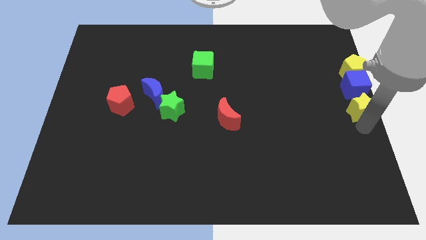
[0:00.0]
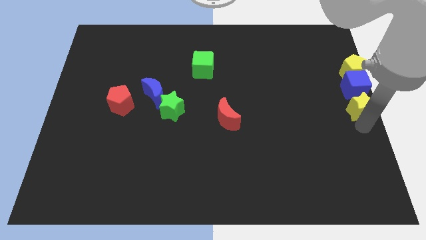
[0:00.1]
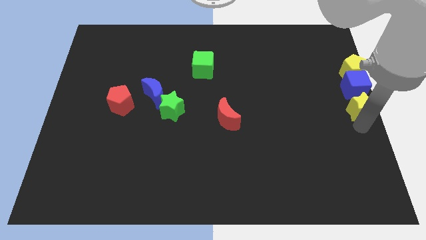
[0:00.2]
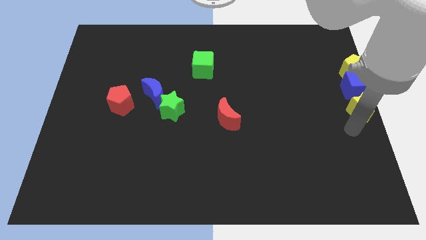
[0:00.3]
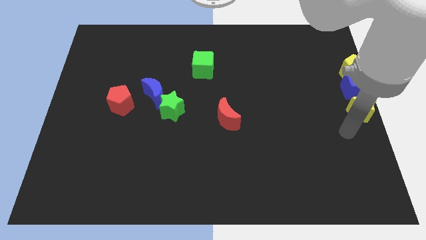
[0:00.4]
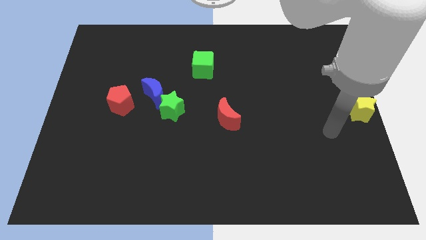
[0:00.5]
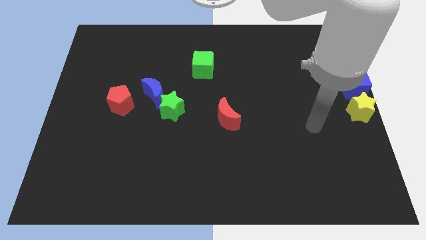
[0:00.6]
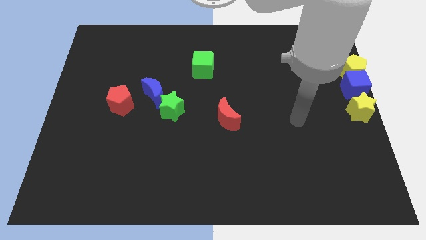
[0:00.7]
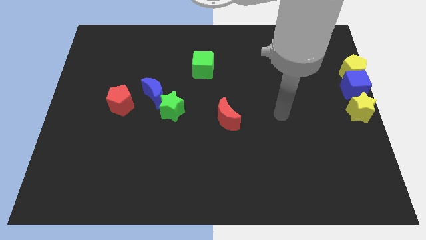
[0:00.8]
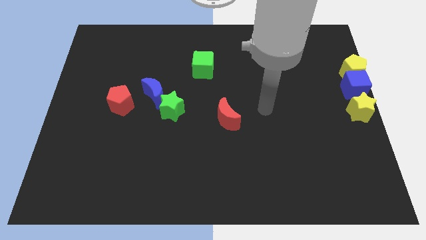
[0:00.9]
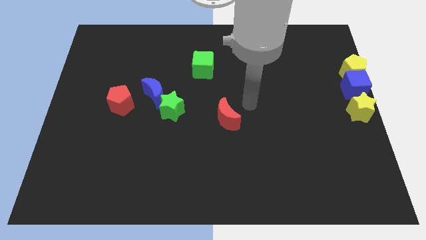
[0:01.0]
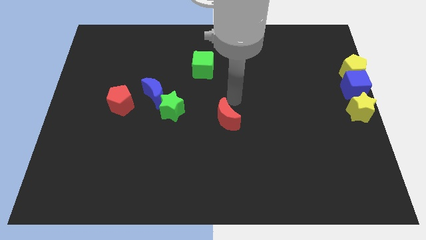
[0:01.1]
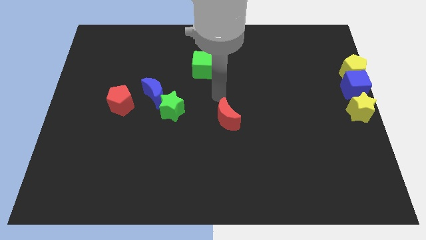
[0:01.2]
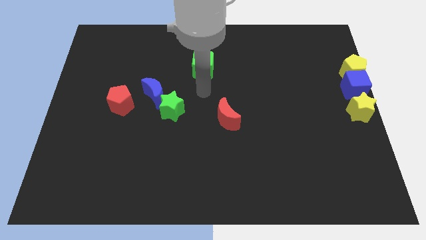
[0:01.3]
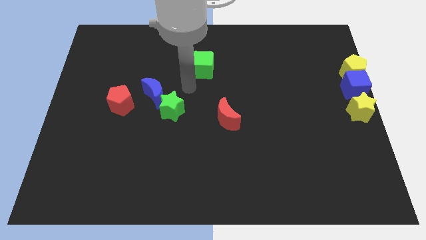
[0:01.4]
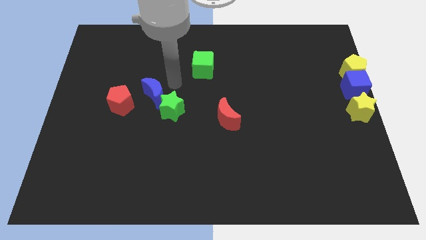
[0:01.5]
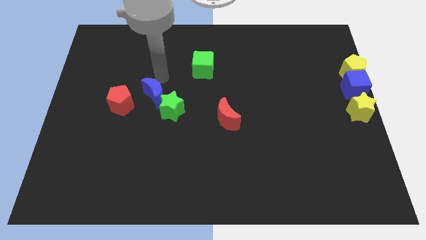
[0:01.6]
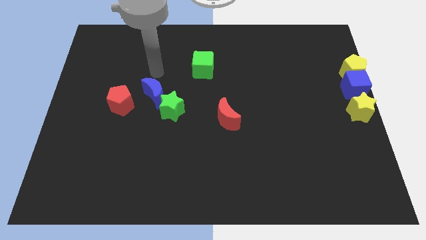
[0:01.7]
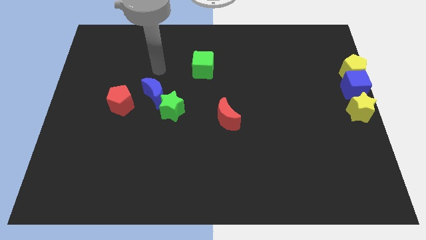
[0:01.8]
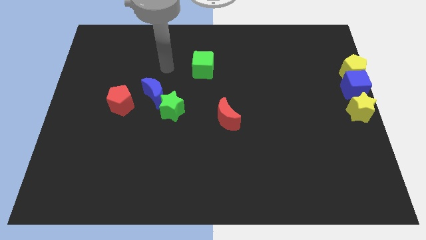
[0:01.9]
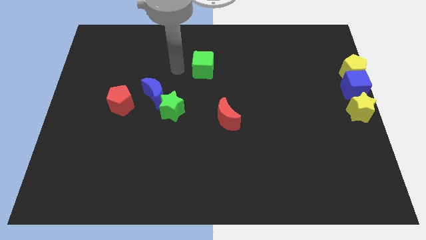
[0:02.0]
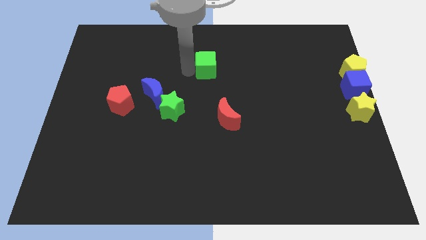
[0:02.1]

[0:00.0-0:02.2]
move your arm towards the green cube

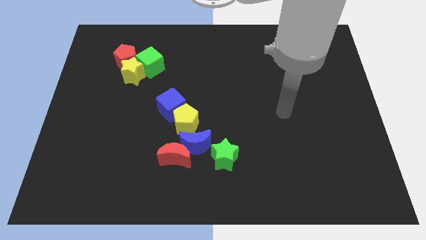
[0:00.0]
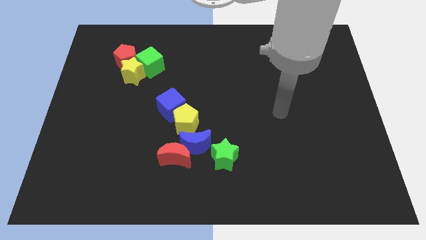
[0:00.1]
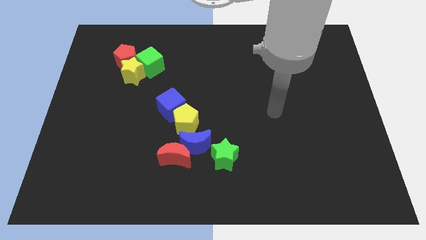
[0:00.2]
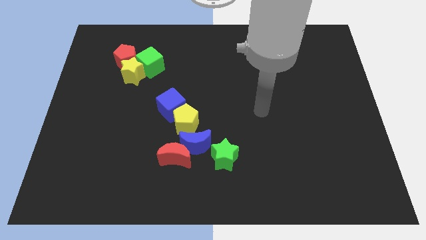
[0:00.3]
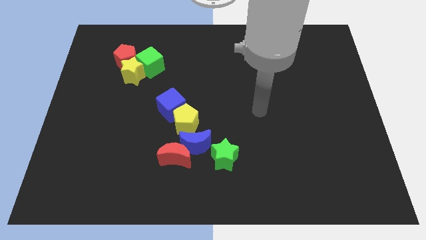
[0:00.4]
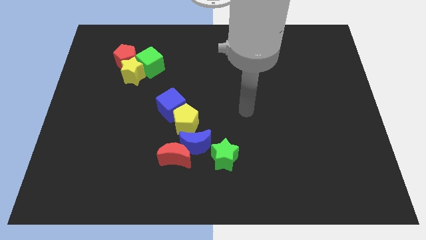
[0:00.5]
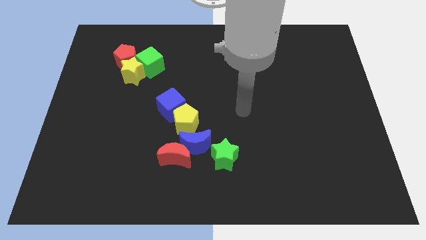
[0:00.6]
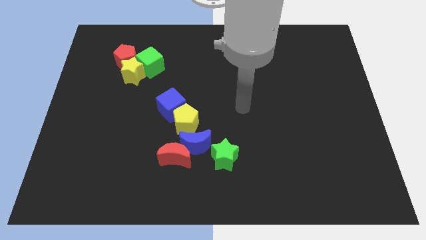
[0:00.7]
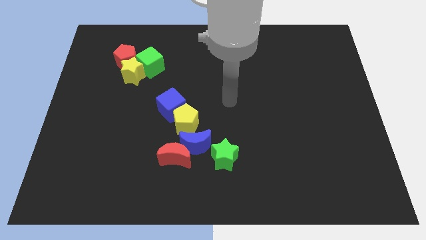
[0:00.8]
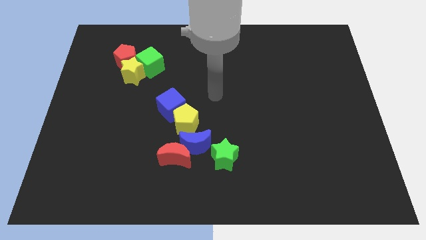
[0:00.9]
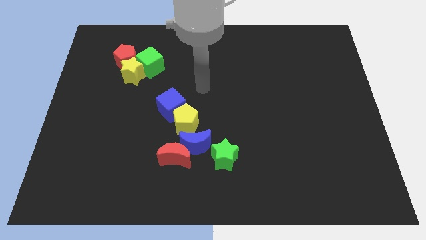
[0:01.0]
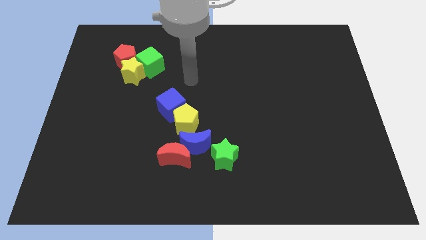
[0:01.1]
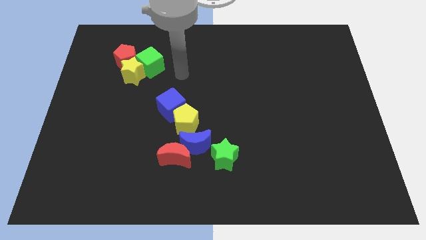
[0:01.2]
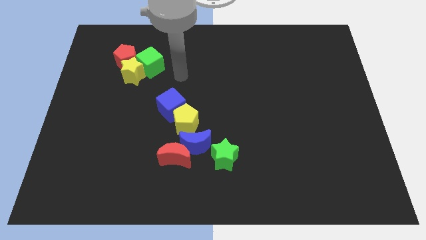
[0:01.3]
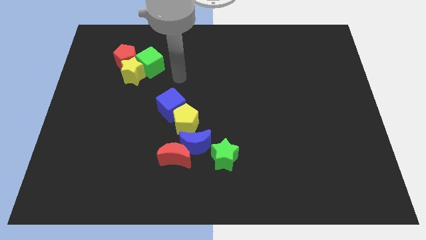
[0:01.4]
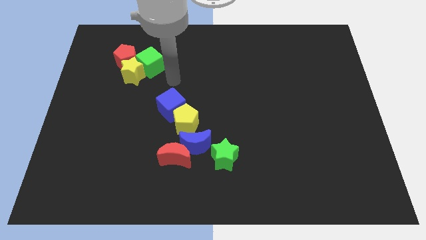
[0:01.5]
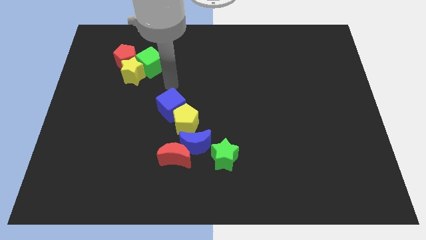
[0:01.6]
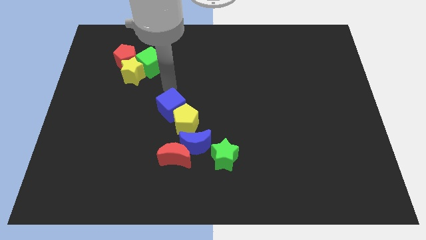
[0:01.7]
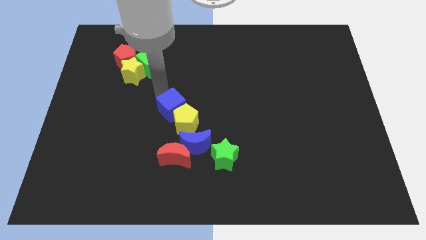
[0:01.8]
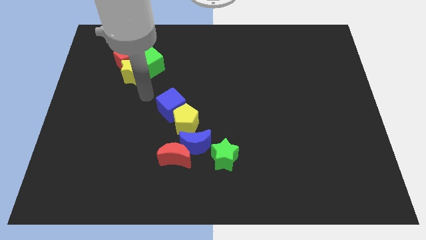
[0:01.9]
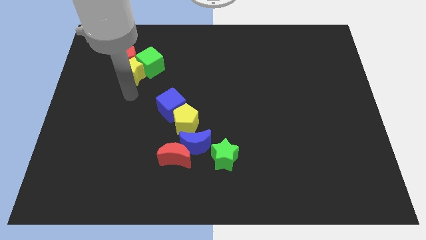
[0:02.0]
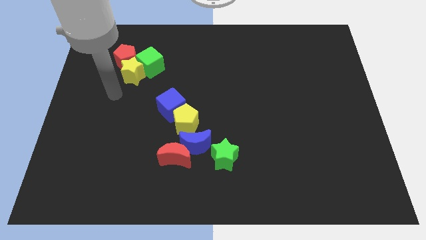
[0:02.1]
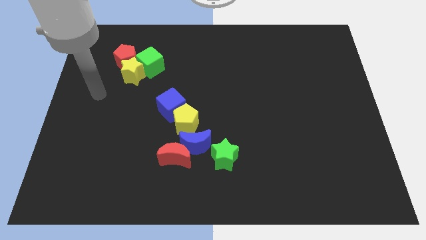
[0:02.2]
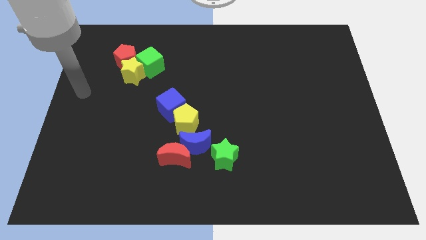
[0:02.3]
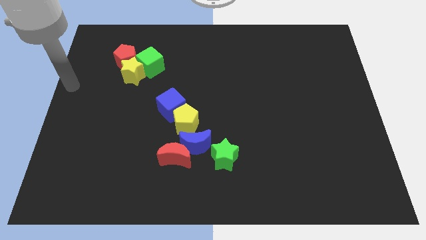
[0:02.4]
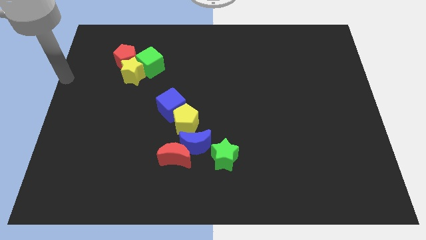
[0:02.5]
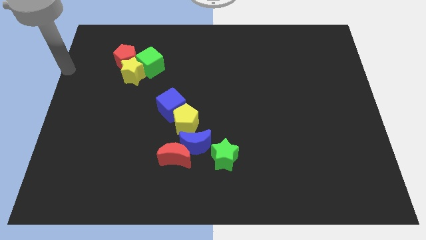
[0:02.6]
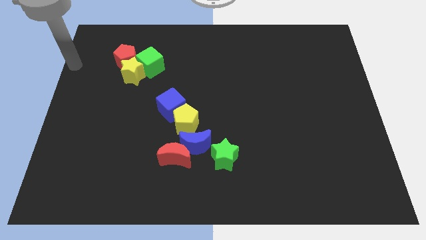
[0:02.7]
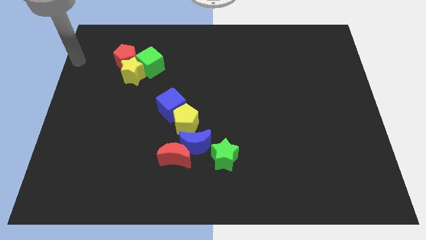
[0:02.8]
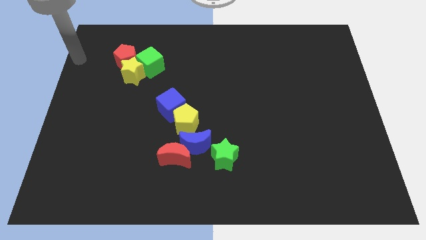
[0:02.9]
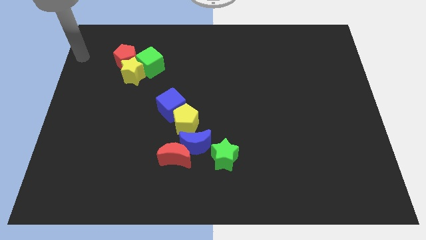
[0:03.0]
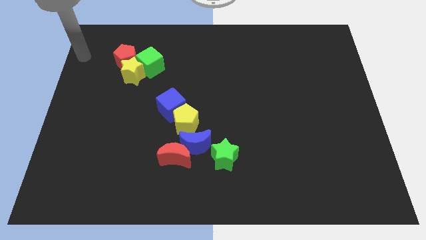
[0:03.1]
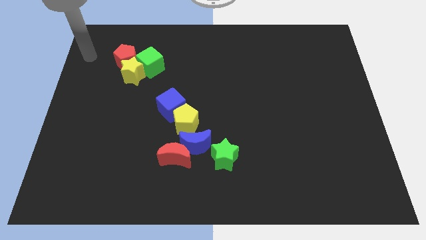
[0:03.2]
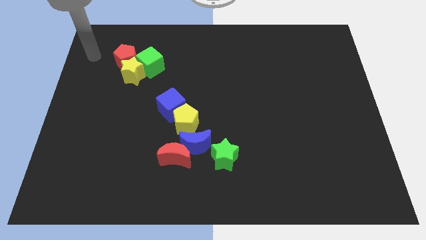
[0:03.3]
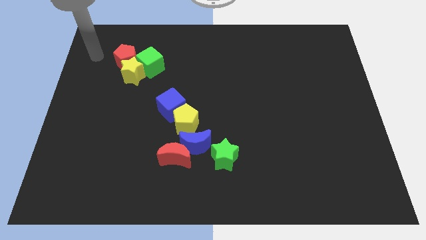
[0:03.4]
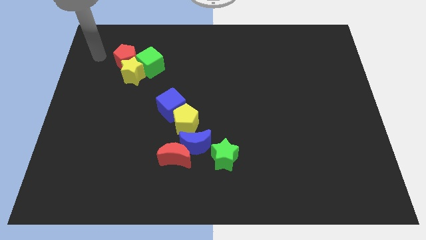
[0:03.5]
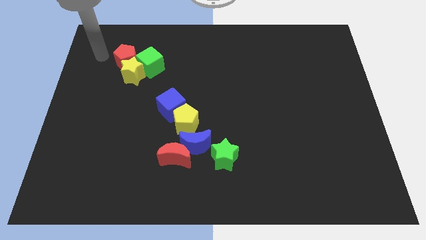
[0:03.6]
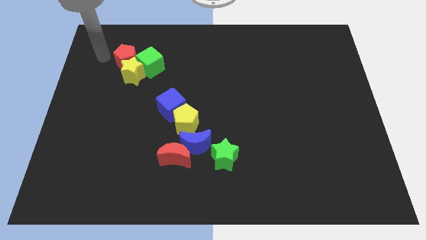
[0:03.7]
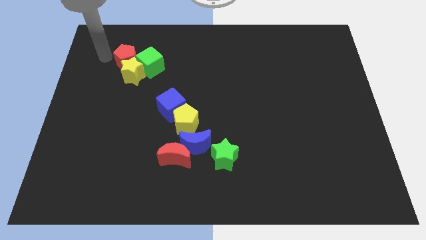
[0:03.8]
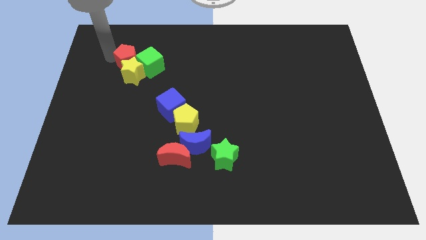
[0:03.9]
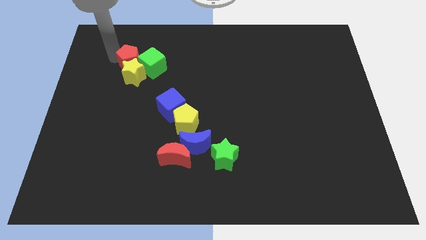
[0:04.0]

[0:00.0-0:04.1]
point your arm to left of red pentagon

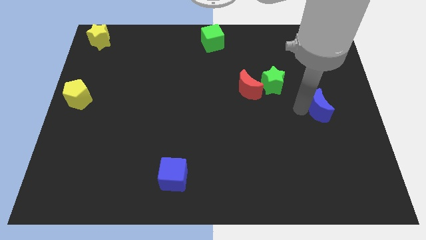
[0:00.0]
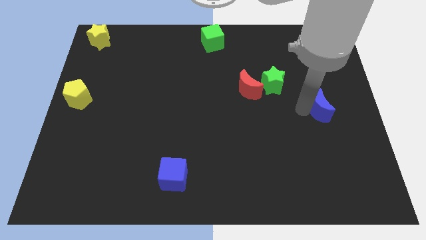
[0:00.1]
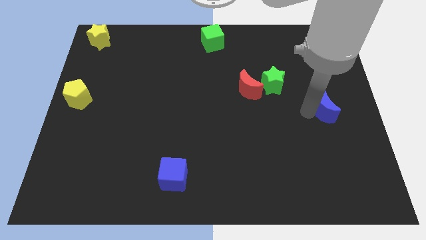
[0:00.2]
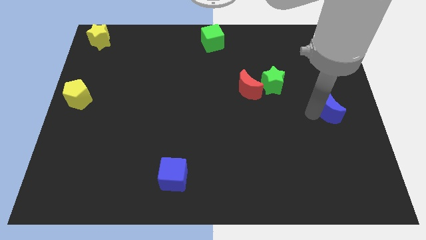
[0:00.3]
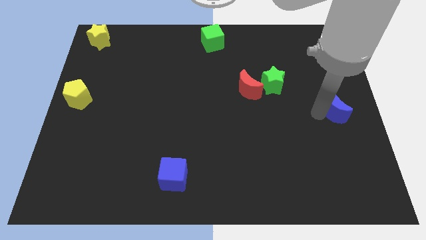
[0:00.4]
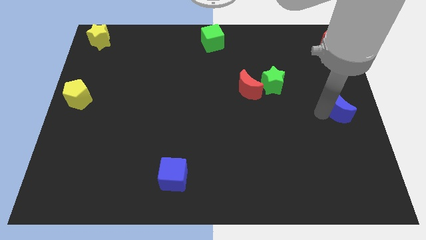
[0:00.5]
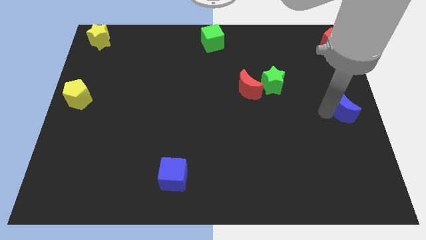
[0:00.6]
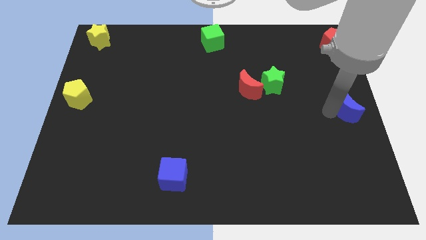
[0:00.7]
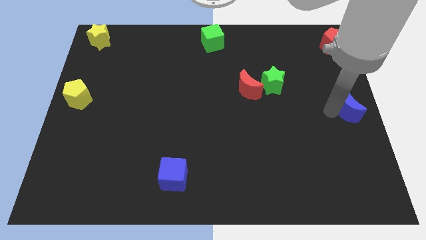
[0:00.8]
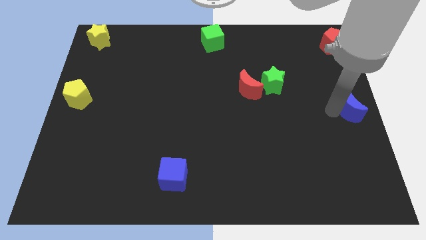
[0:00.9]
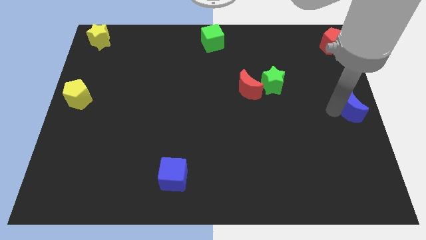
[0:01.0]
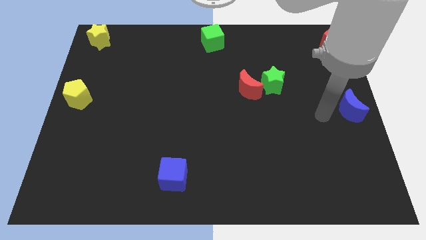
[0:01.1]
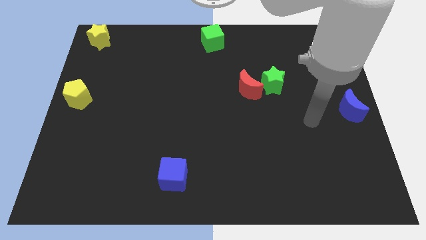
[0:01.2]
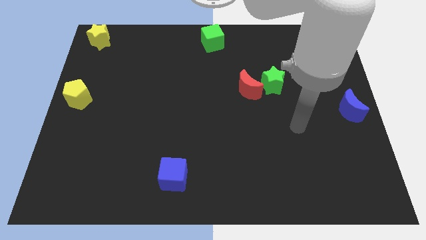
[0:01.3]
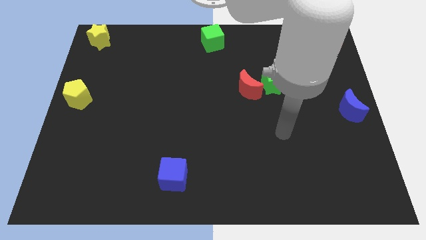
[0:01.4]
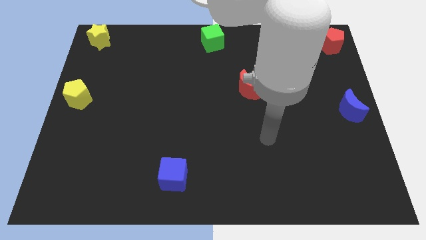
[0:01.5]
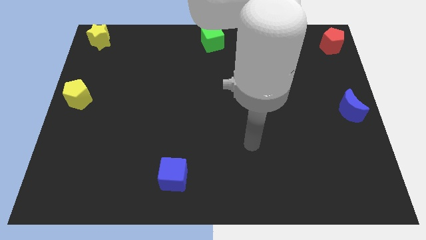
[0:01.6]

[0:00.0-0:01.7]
push the blue crescent to the right center of the board

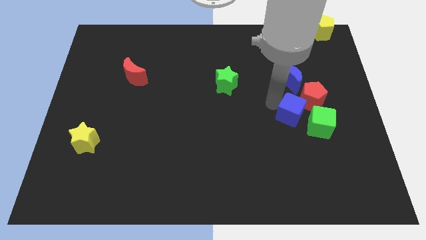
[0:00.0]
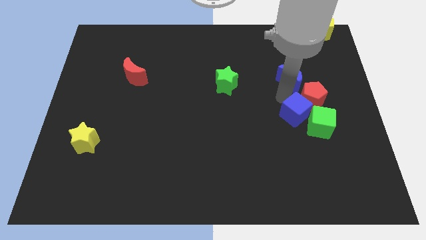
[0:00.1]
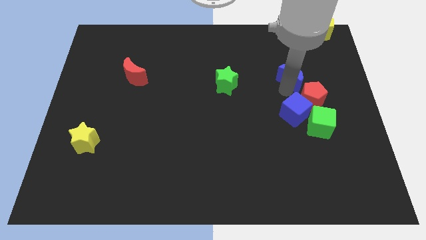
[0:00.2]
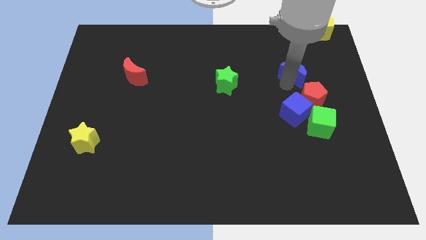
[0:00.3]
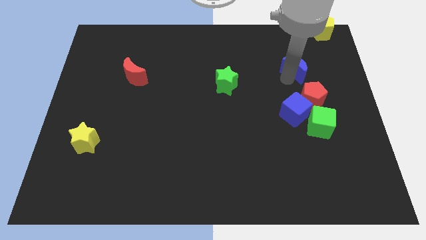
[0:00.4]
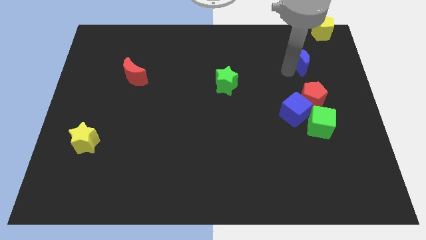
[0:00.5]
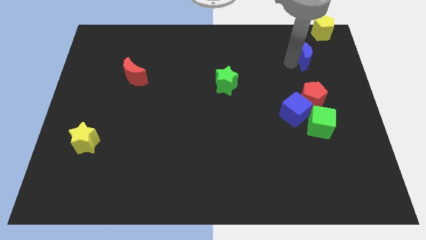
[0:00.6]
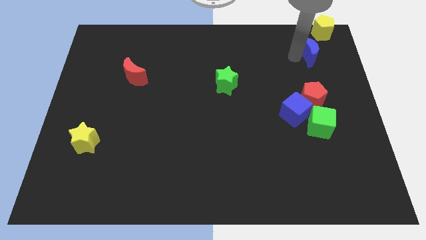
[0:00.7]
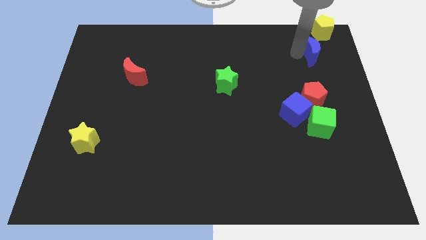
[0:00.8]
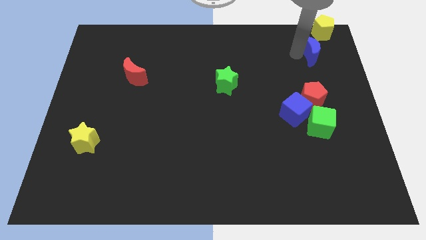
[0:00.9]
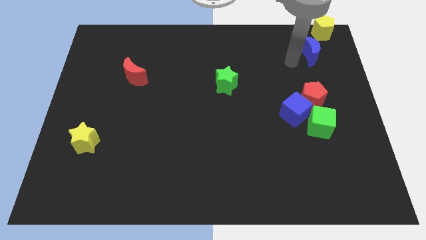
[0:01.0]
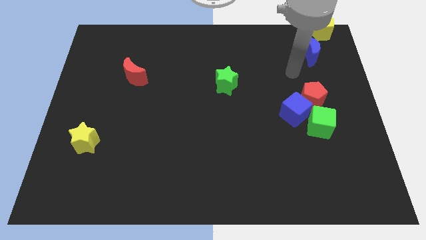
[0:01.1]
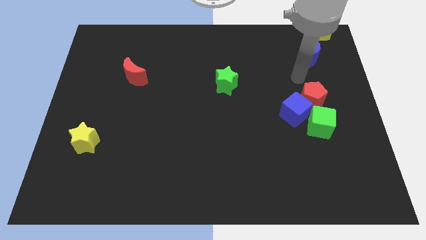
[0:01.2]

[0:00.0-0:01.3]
place blue moon to the bottom of yellow pentagon
